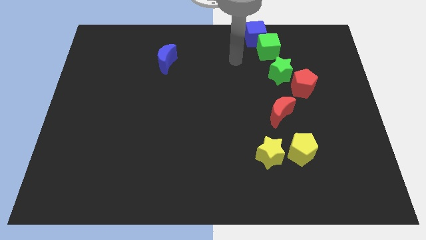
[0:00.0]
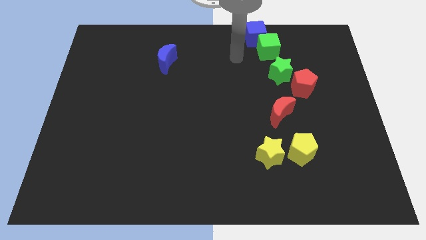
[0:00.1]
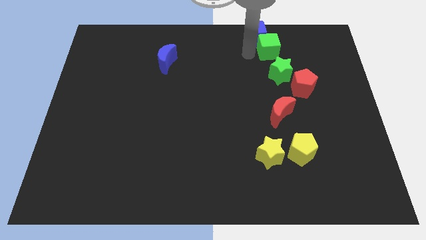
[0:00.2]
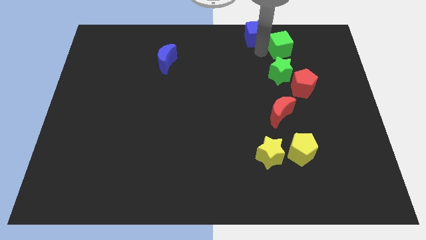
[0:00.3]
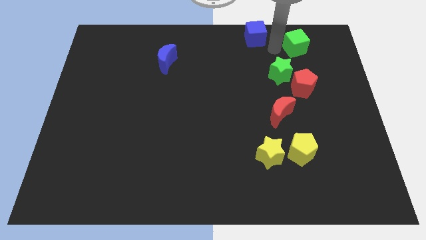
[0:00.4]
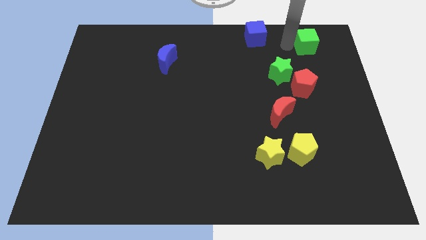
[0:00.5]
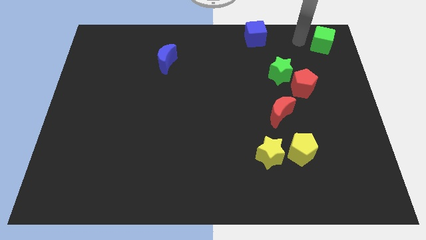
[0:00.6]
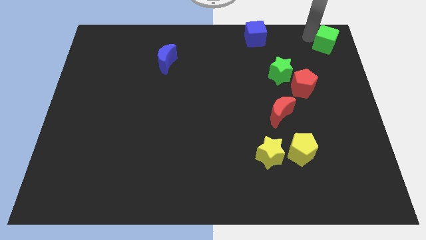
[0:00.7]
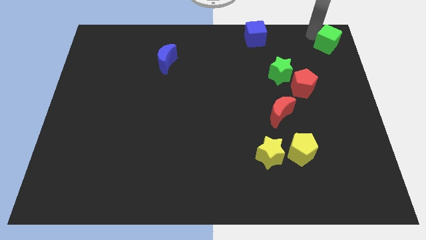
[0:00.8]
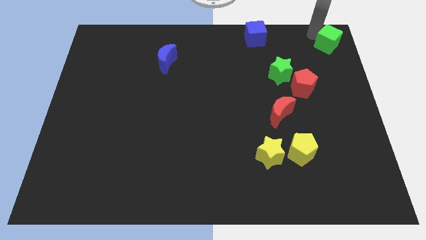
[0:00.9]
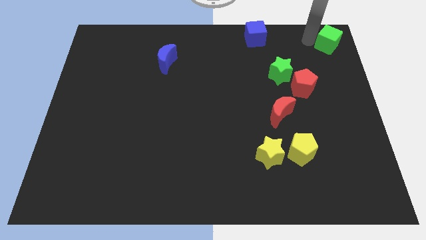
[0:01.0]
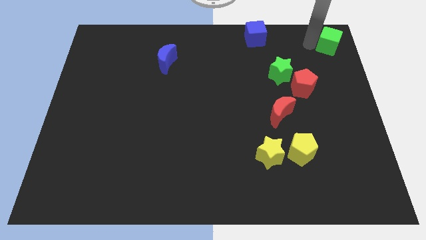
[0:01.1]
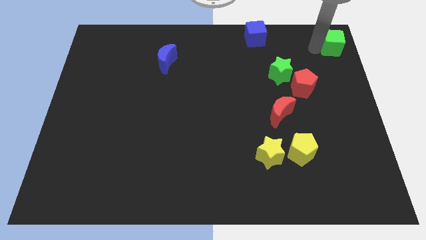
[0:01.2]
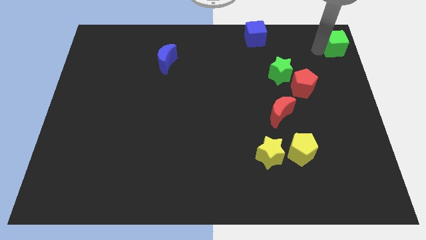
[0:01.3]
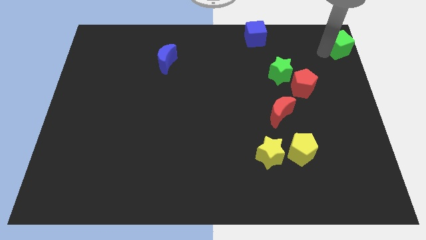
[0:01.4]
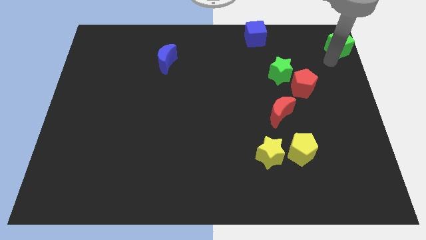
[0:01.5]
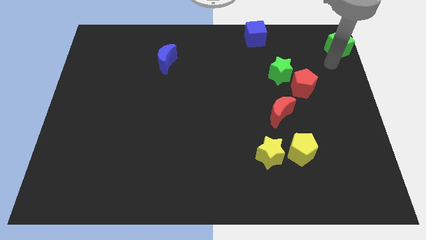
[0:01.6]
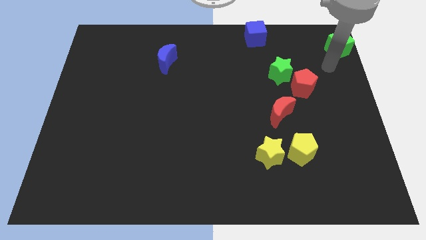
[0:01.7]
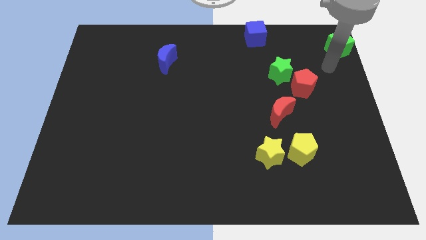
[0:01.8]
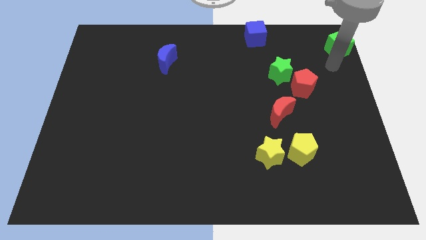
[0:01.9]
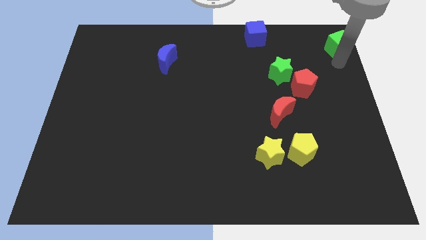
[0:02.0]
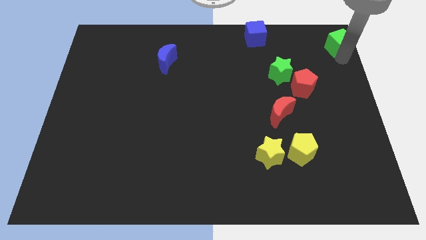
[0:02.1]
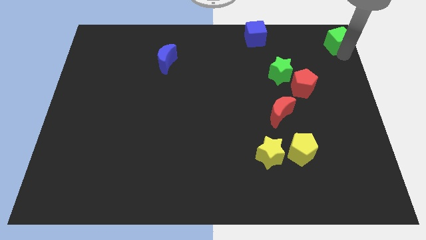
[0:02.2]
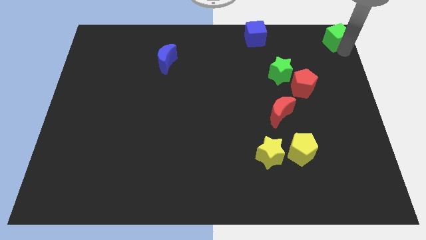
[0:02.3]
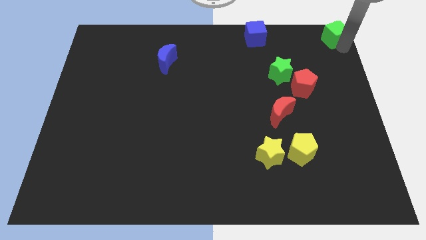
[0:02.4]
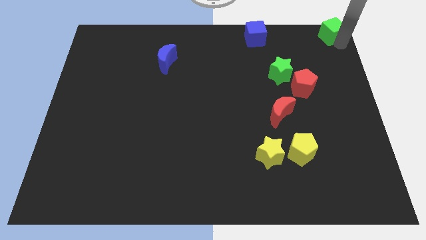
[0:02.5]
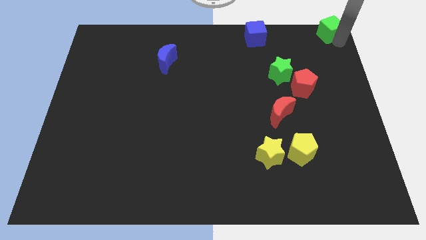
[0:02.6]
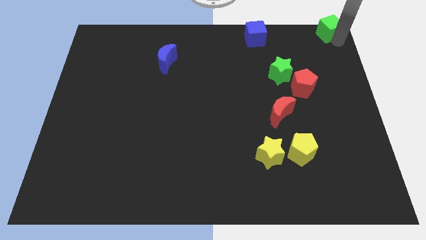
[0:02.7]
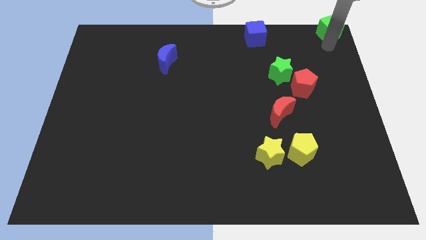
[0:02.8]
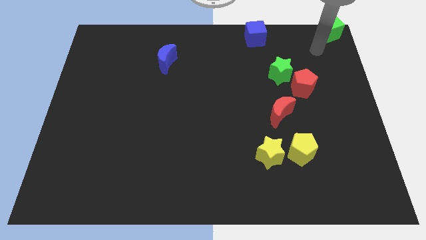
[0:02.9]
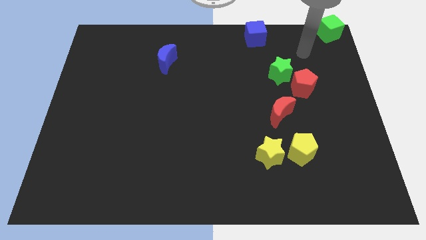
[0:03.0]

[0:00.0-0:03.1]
put the green cube at the top right corner of the board

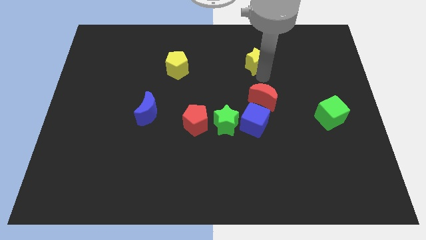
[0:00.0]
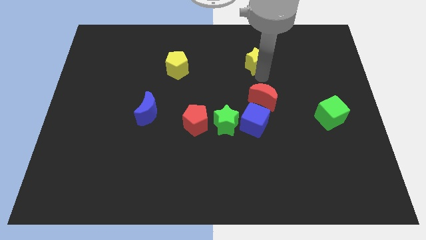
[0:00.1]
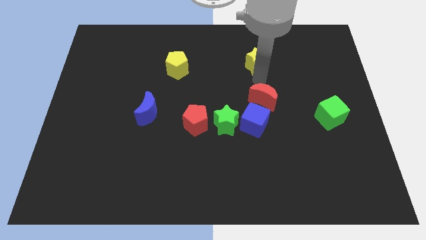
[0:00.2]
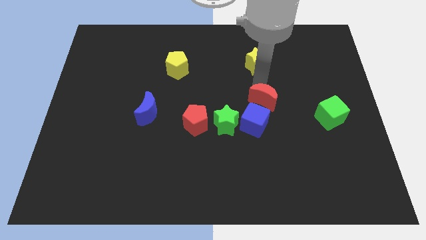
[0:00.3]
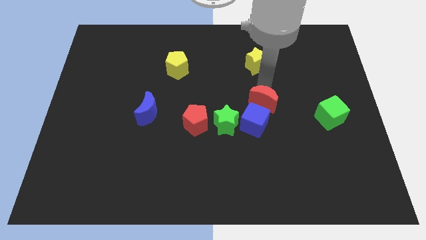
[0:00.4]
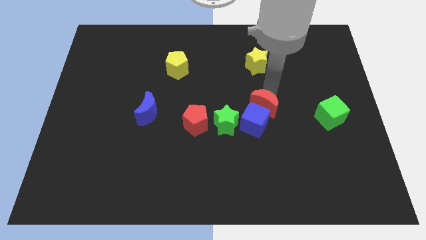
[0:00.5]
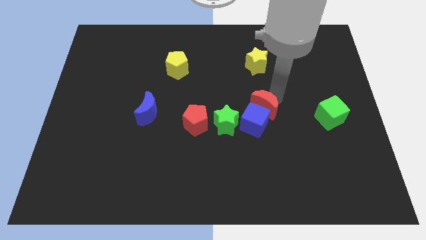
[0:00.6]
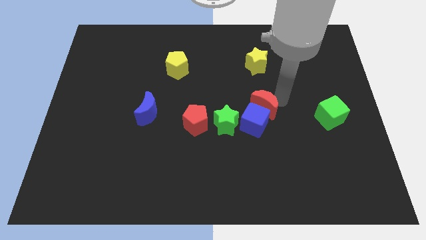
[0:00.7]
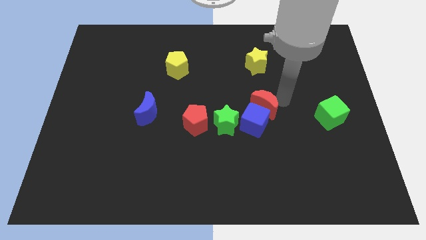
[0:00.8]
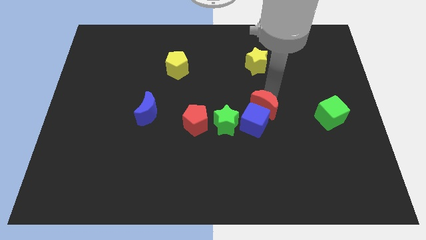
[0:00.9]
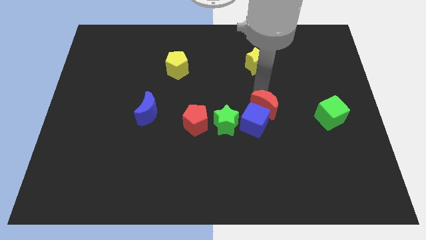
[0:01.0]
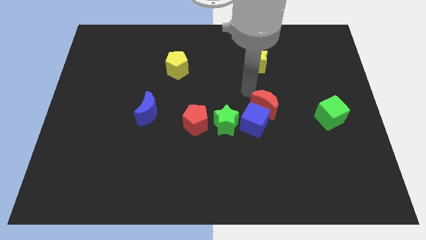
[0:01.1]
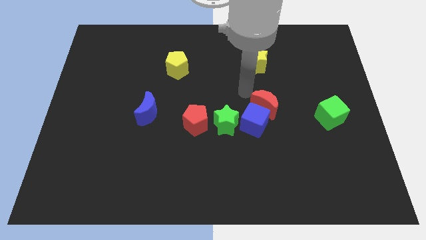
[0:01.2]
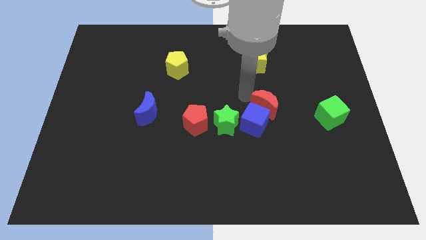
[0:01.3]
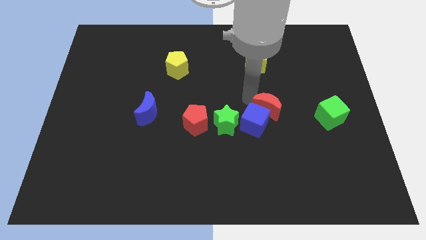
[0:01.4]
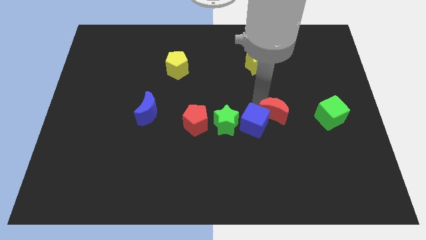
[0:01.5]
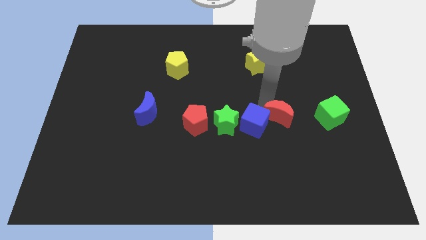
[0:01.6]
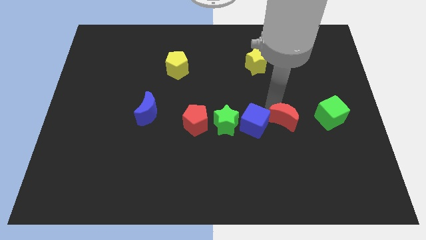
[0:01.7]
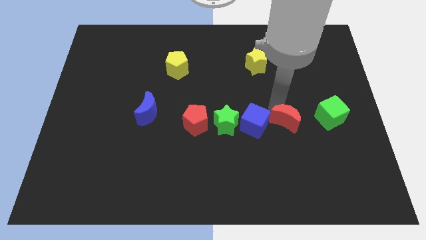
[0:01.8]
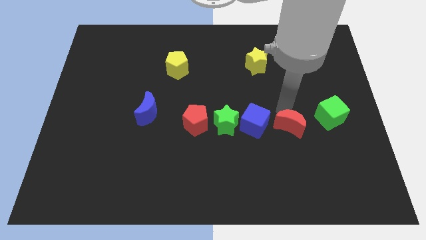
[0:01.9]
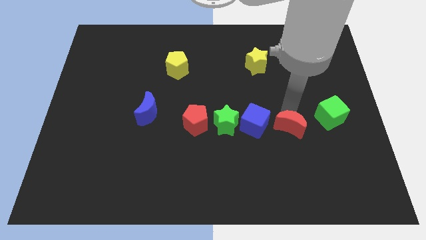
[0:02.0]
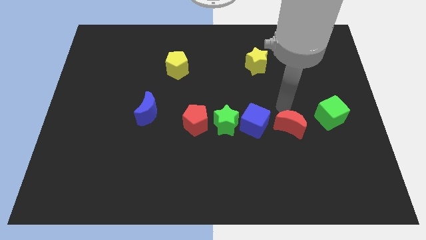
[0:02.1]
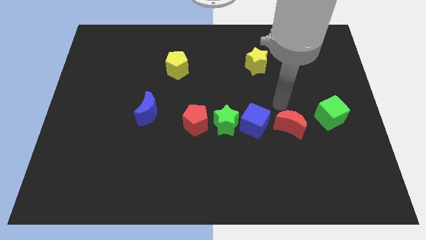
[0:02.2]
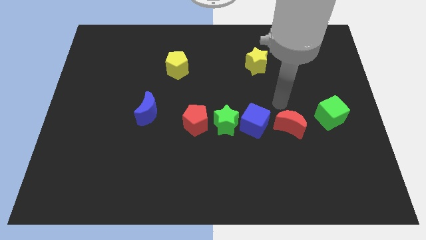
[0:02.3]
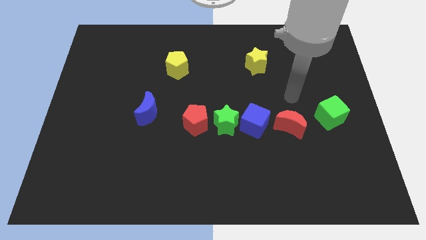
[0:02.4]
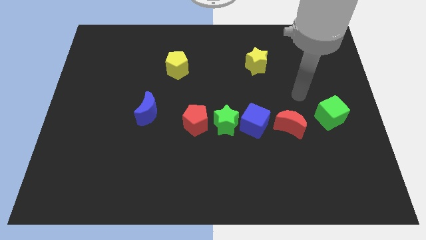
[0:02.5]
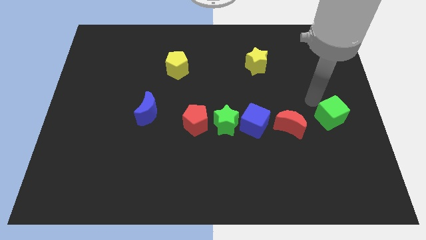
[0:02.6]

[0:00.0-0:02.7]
push the red moon to the right side of the blue cube

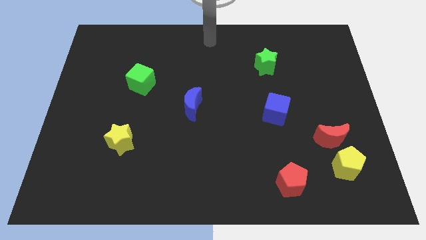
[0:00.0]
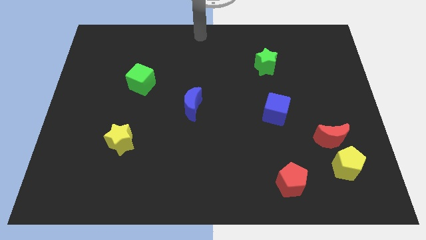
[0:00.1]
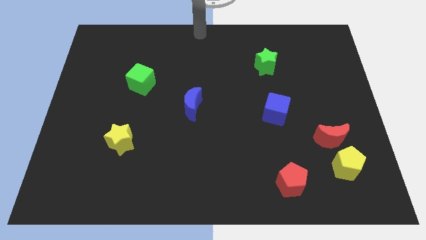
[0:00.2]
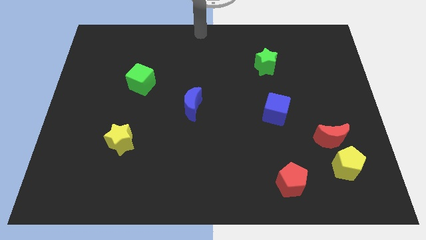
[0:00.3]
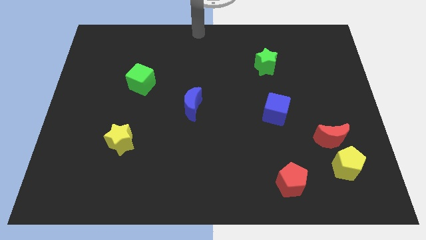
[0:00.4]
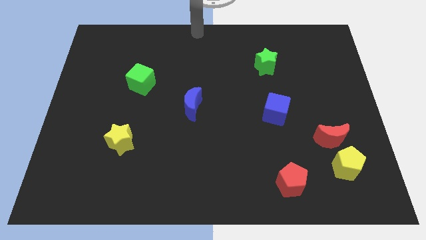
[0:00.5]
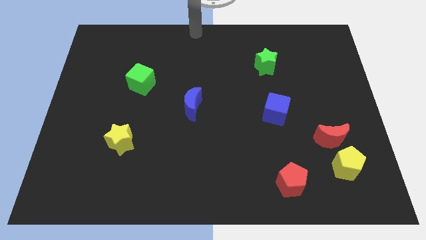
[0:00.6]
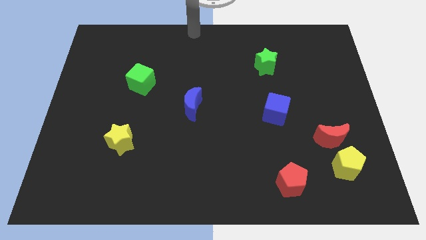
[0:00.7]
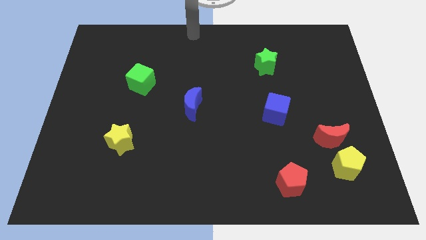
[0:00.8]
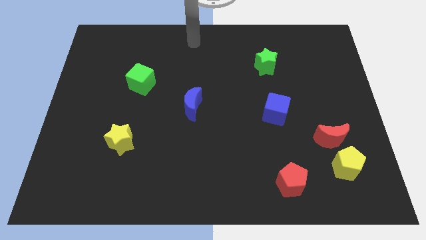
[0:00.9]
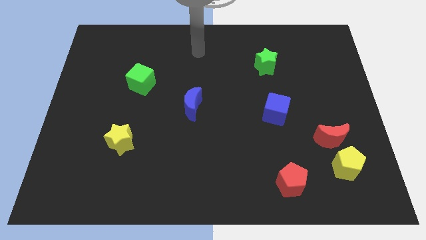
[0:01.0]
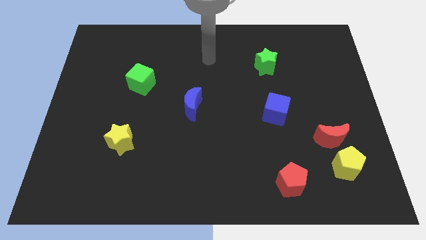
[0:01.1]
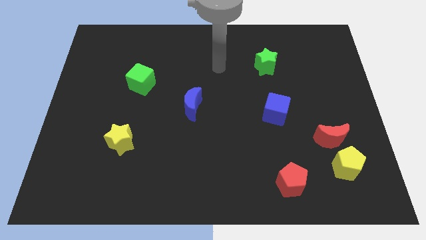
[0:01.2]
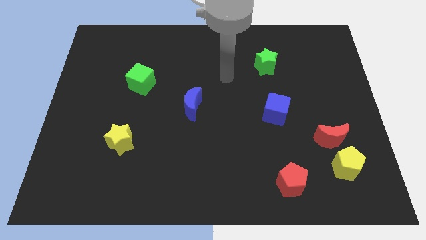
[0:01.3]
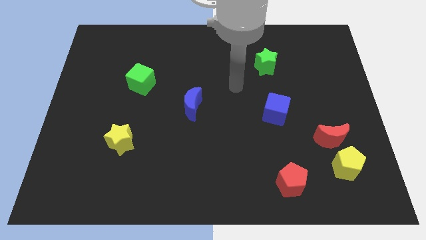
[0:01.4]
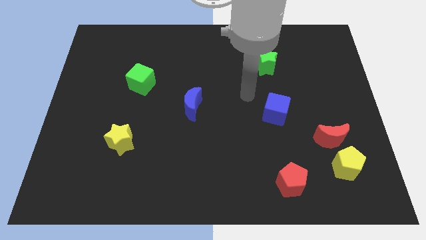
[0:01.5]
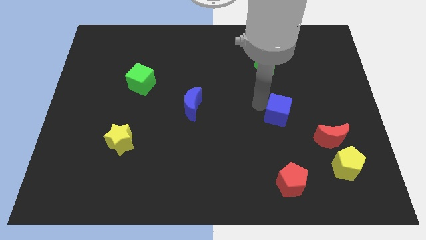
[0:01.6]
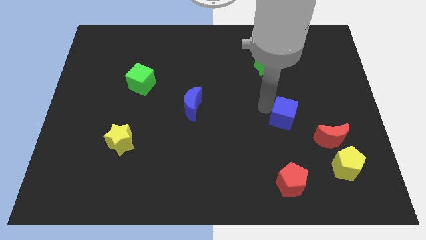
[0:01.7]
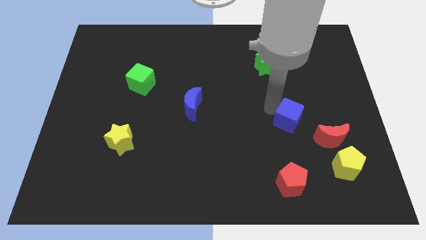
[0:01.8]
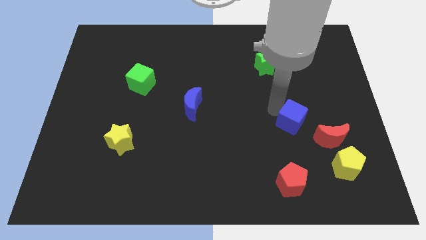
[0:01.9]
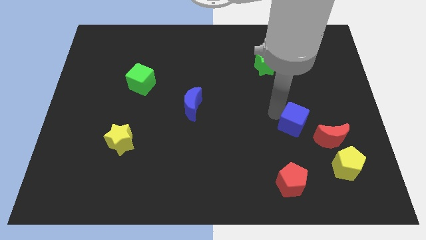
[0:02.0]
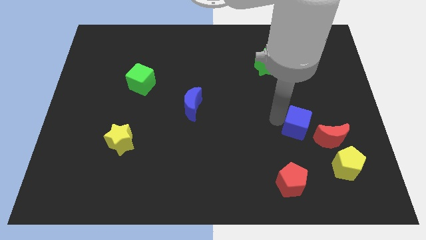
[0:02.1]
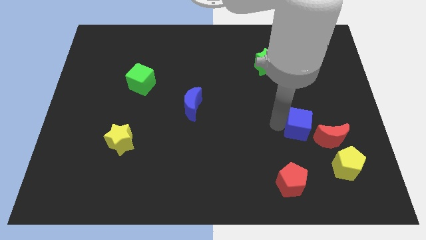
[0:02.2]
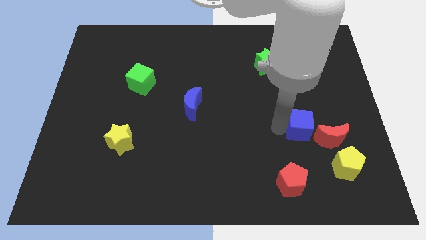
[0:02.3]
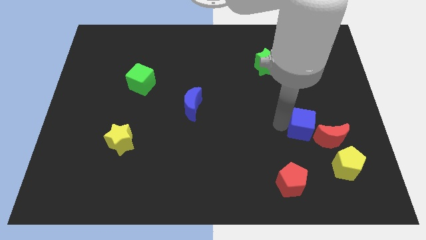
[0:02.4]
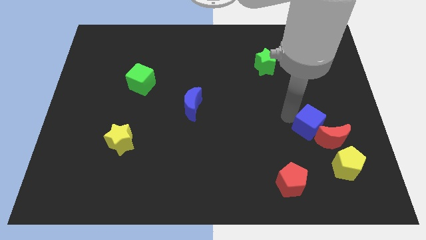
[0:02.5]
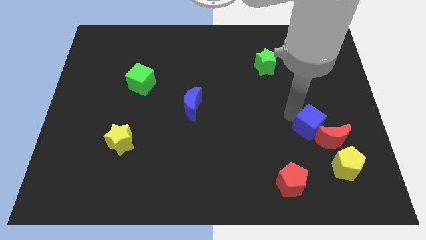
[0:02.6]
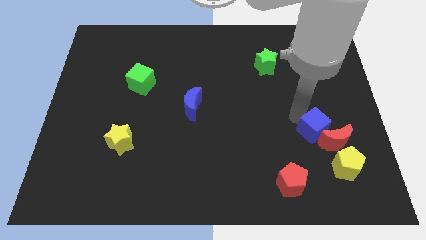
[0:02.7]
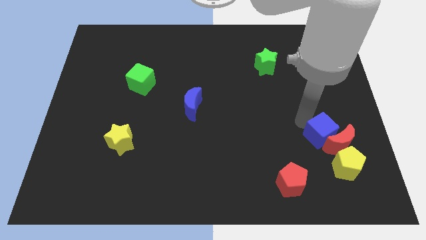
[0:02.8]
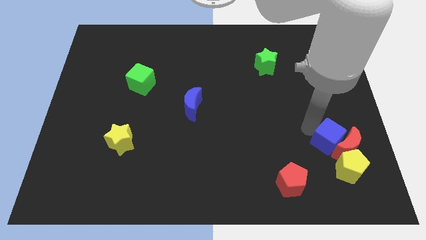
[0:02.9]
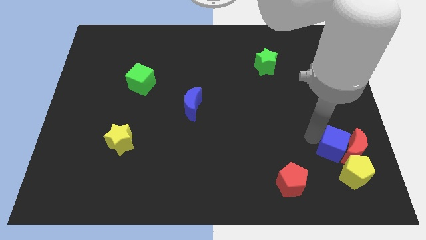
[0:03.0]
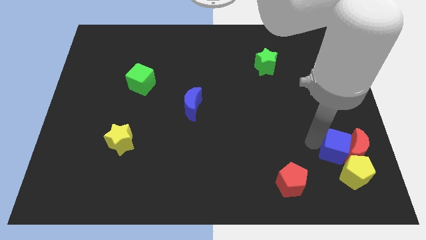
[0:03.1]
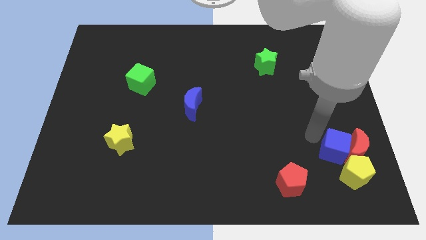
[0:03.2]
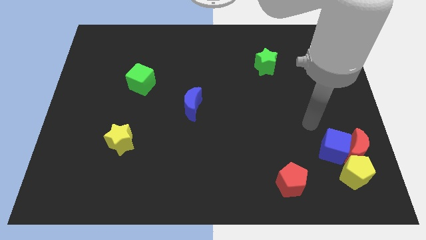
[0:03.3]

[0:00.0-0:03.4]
move the blue cube into the red crescent
